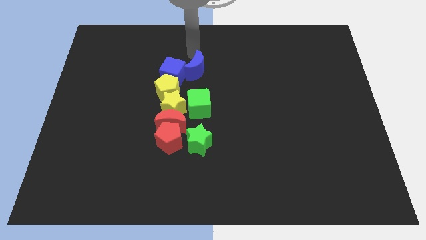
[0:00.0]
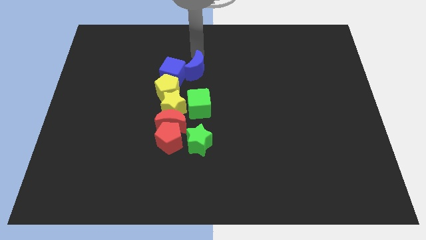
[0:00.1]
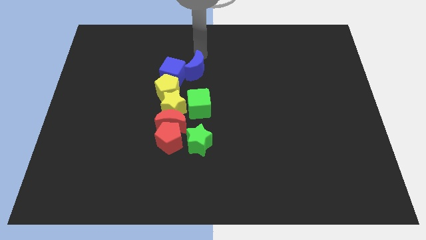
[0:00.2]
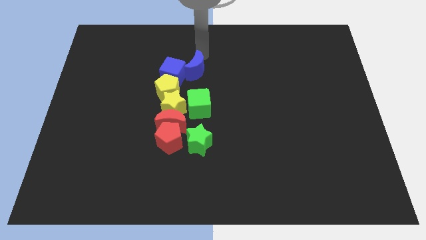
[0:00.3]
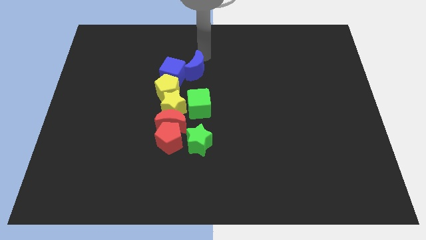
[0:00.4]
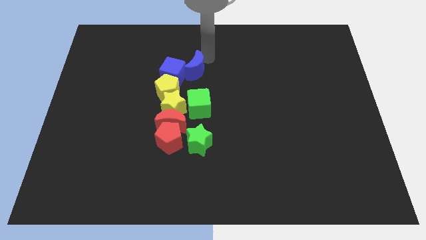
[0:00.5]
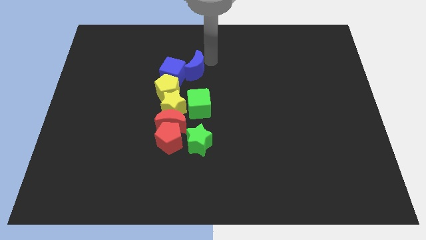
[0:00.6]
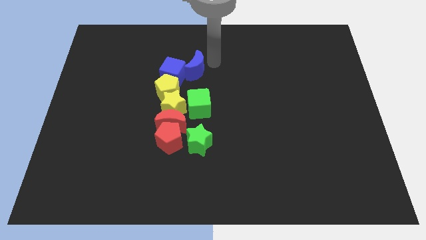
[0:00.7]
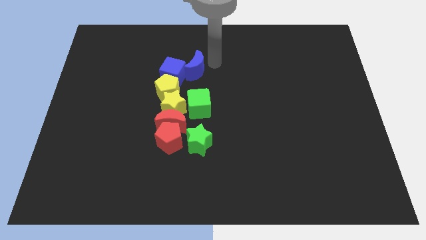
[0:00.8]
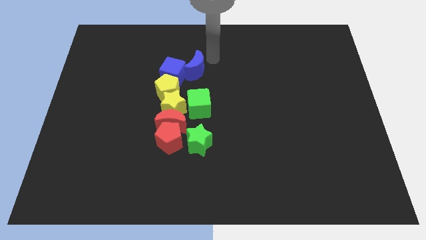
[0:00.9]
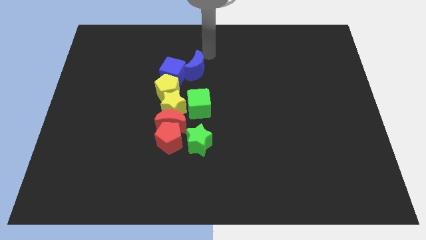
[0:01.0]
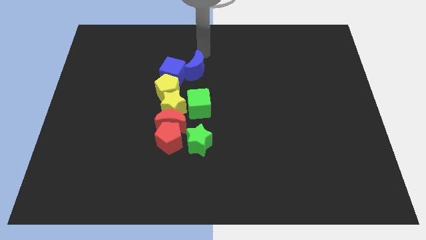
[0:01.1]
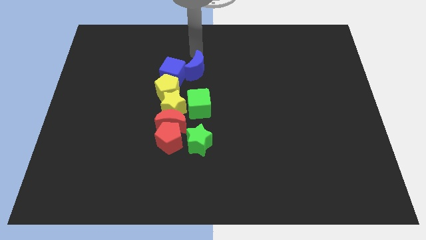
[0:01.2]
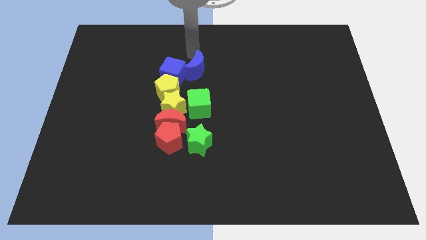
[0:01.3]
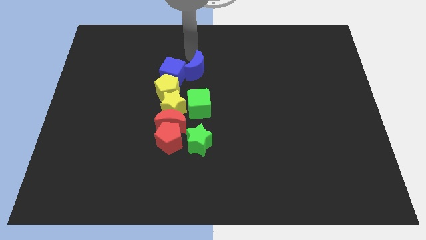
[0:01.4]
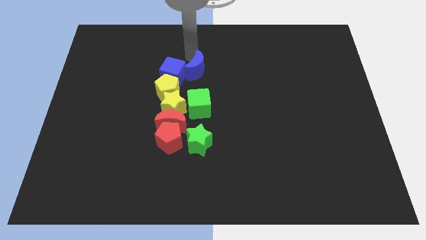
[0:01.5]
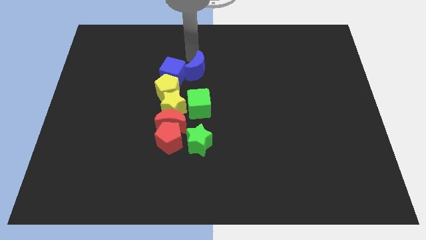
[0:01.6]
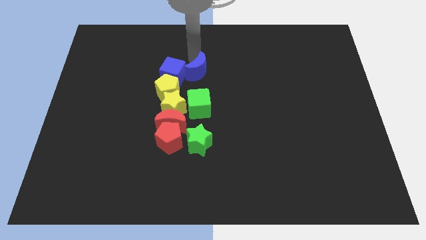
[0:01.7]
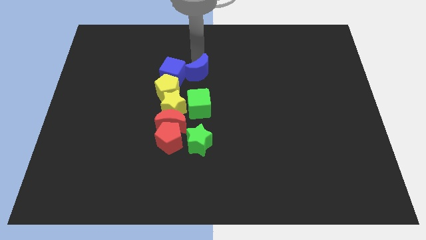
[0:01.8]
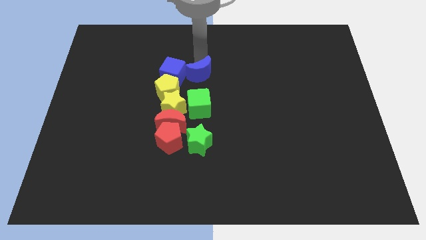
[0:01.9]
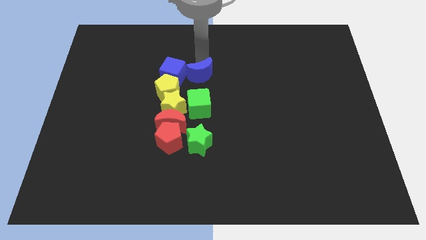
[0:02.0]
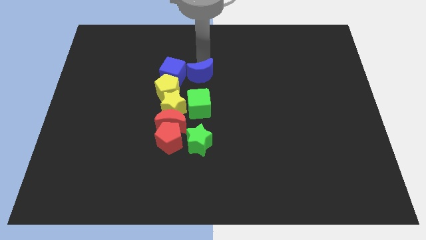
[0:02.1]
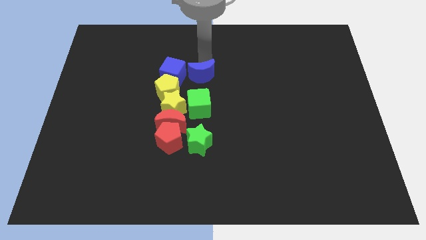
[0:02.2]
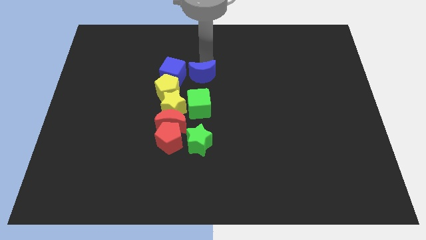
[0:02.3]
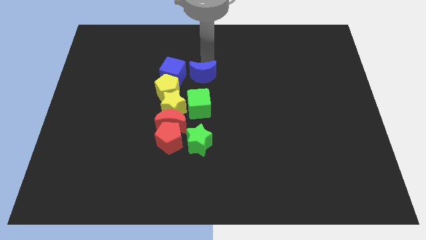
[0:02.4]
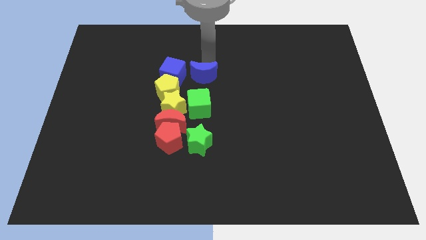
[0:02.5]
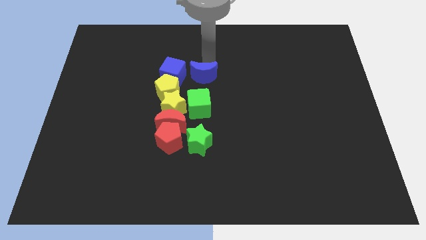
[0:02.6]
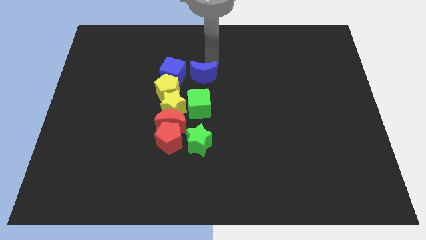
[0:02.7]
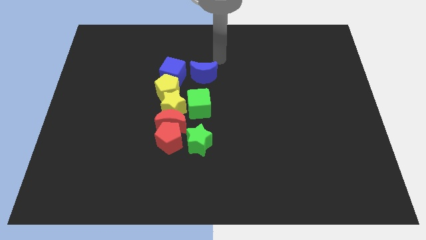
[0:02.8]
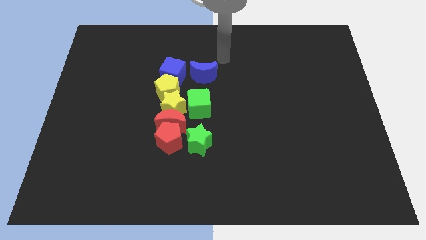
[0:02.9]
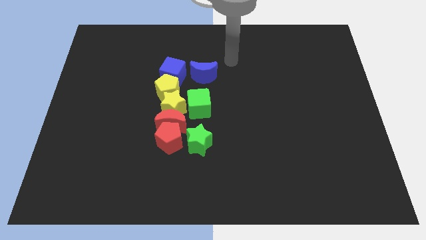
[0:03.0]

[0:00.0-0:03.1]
slide the blue crescent horizontally on the right side of the blue cube

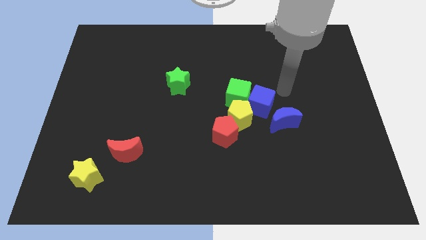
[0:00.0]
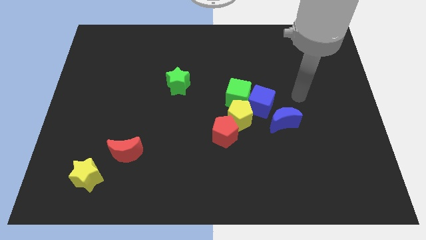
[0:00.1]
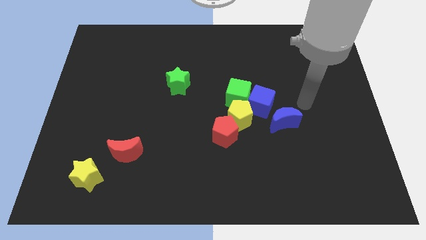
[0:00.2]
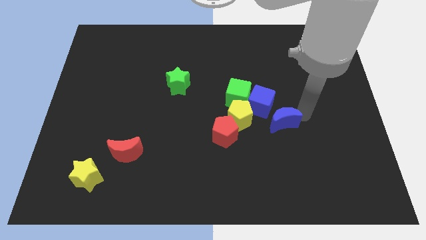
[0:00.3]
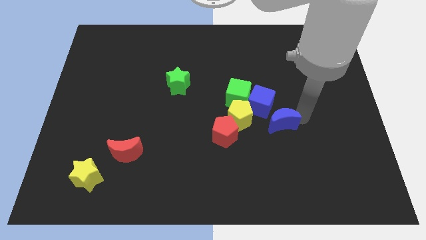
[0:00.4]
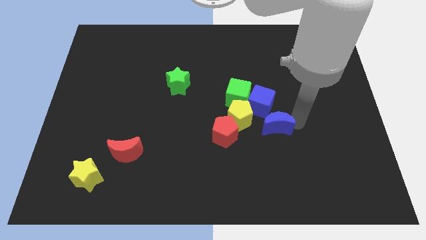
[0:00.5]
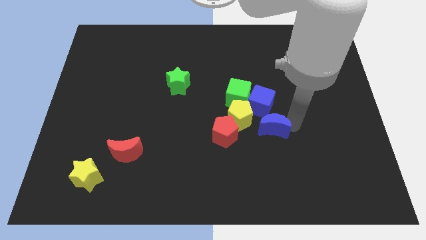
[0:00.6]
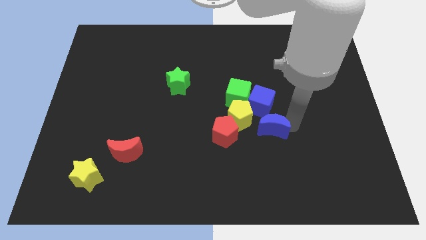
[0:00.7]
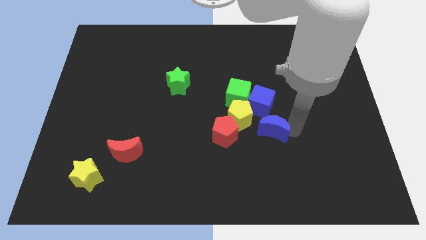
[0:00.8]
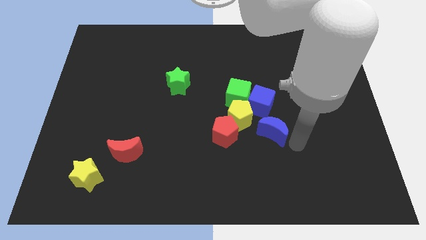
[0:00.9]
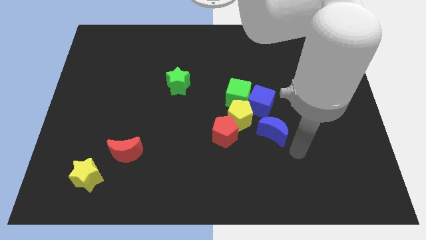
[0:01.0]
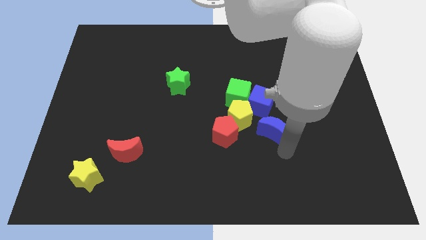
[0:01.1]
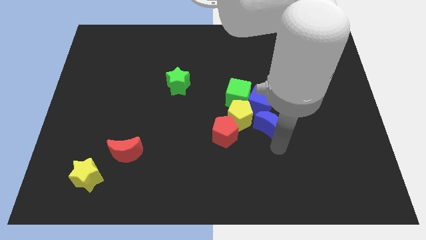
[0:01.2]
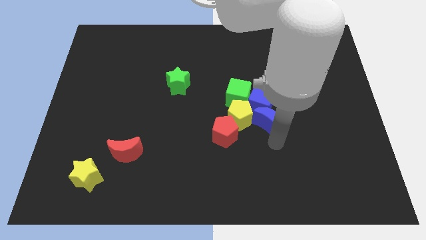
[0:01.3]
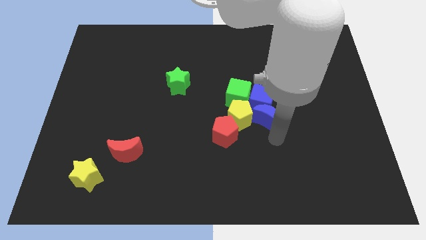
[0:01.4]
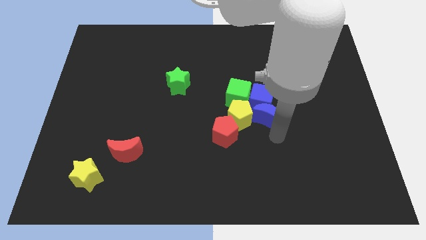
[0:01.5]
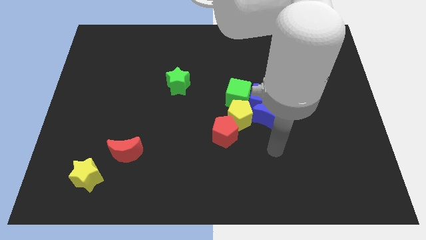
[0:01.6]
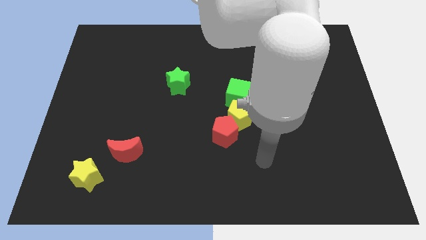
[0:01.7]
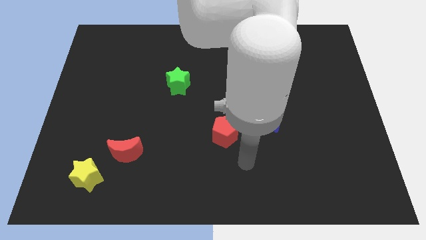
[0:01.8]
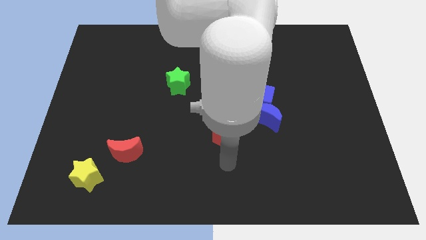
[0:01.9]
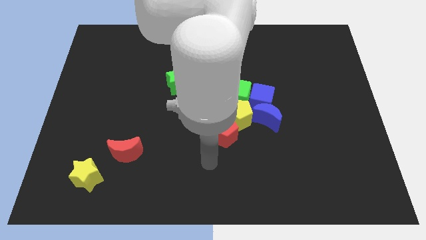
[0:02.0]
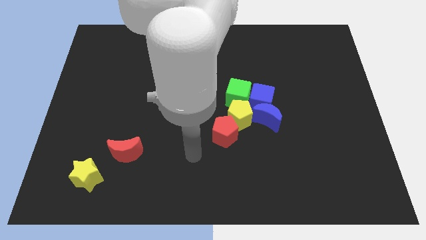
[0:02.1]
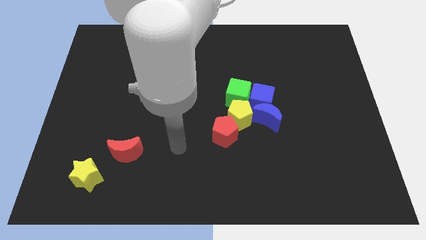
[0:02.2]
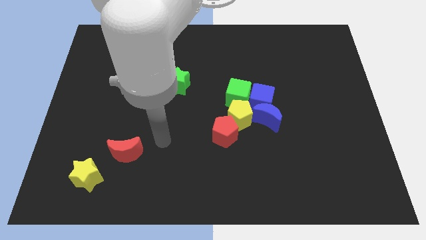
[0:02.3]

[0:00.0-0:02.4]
move the blue moon close to the blue cube

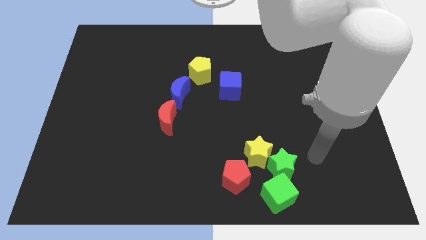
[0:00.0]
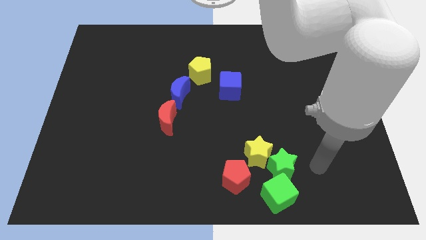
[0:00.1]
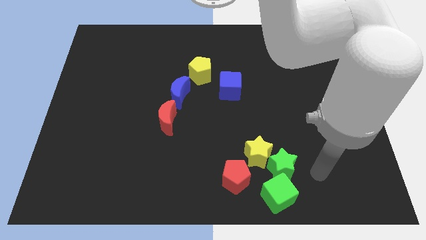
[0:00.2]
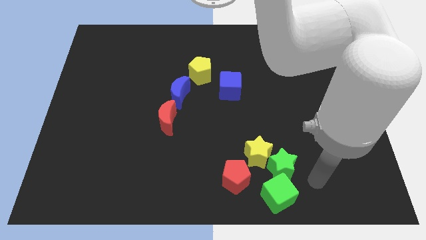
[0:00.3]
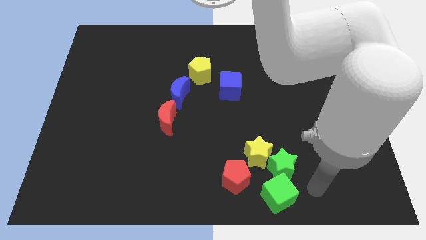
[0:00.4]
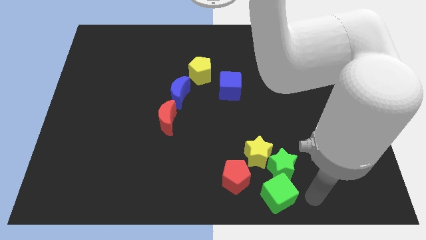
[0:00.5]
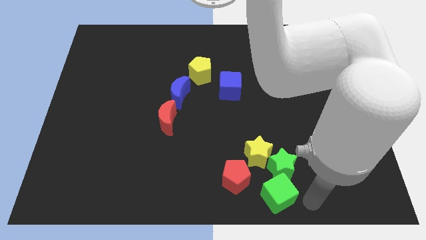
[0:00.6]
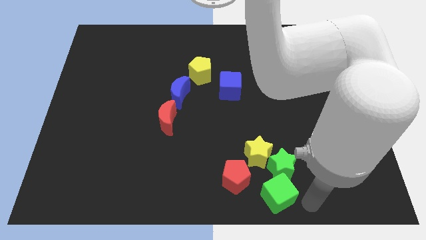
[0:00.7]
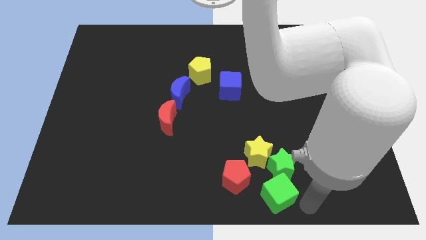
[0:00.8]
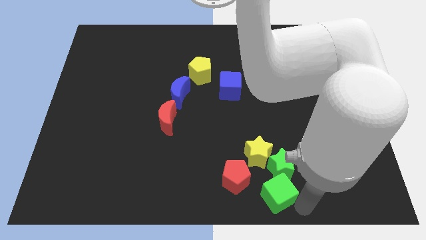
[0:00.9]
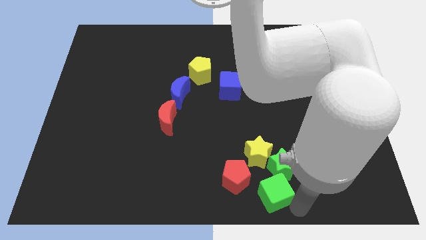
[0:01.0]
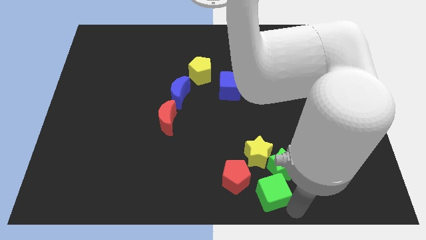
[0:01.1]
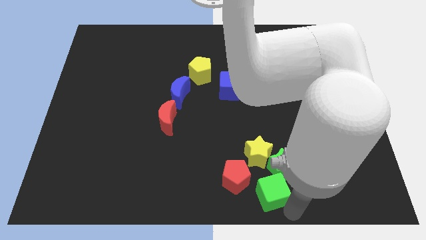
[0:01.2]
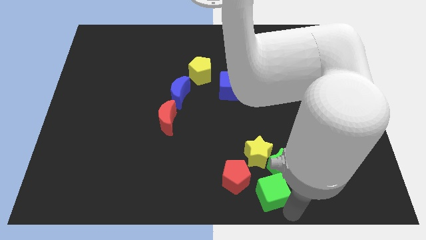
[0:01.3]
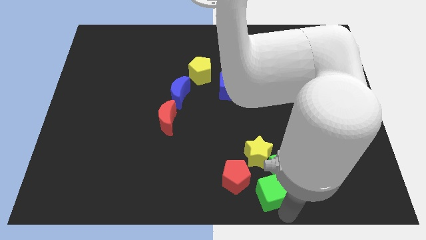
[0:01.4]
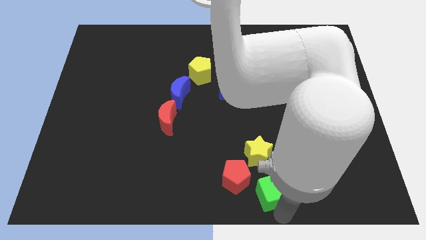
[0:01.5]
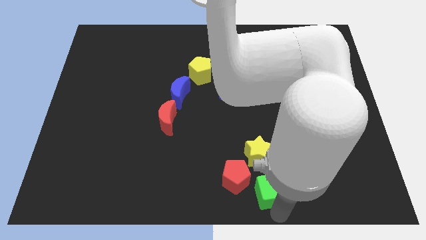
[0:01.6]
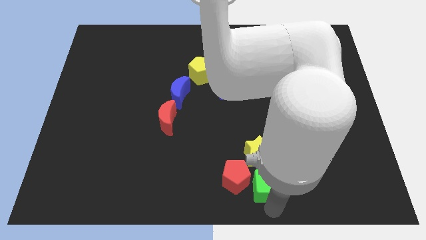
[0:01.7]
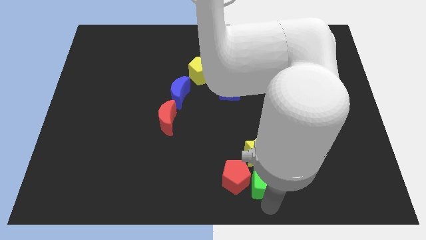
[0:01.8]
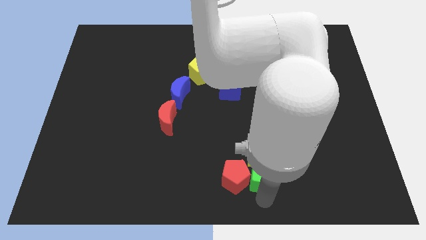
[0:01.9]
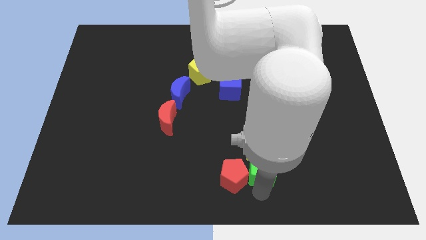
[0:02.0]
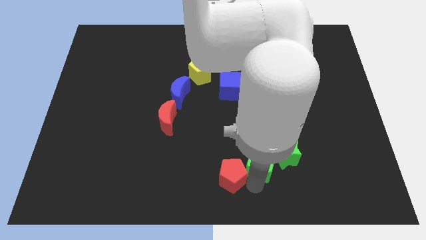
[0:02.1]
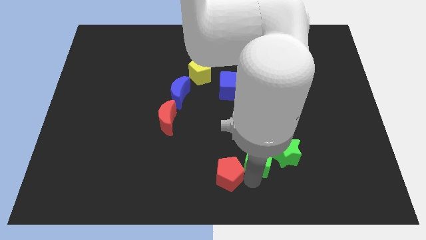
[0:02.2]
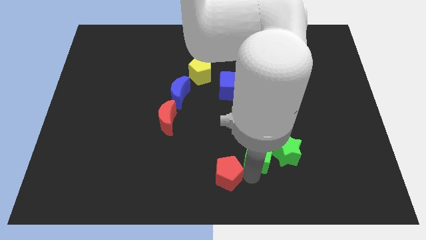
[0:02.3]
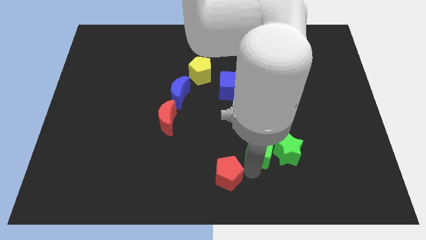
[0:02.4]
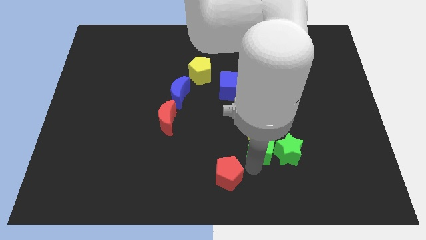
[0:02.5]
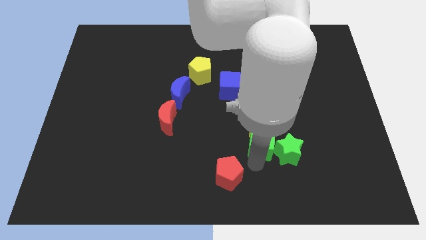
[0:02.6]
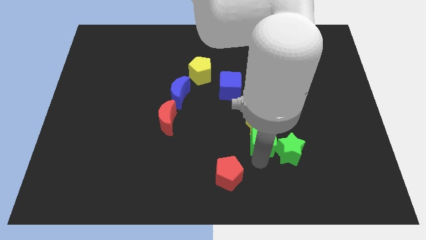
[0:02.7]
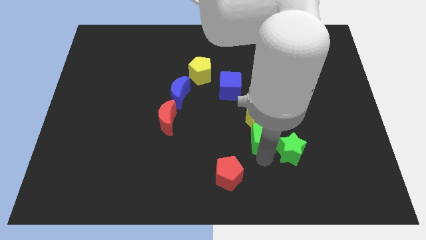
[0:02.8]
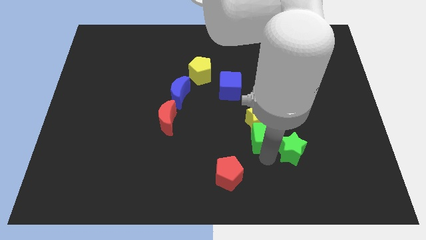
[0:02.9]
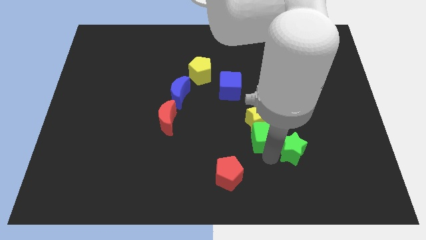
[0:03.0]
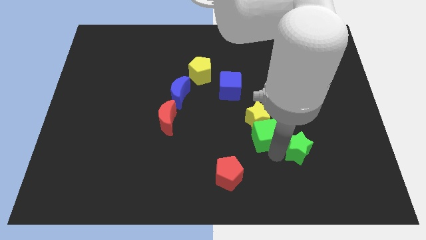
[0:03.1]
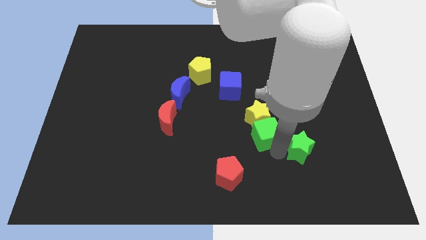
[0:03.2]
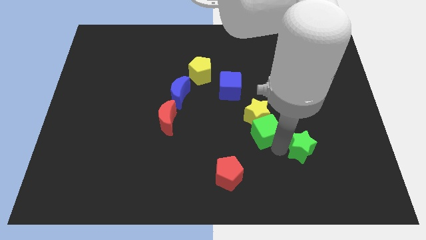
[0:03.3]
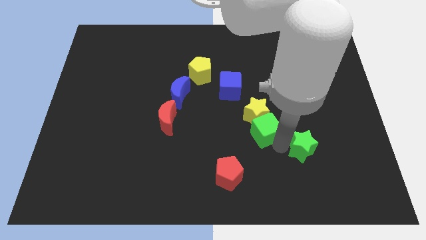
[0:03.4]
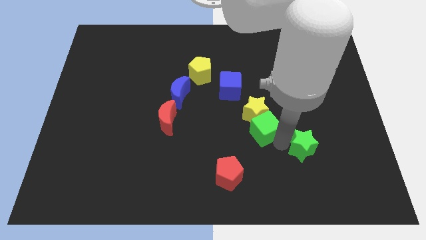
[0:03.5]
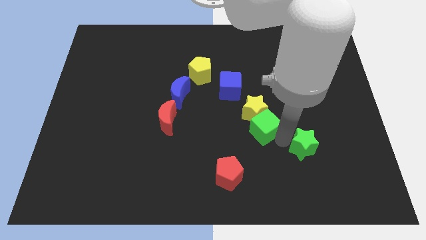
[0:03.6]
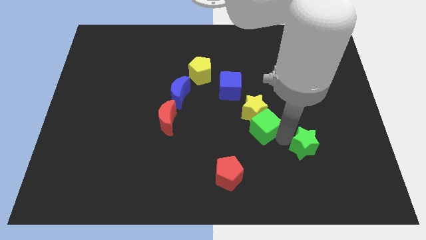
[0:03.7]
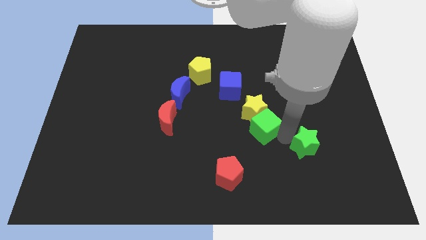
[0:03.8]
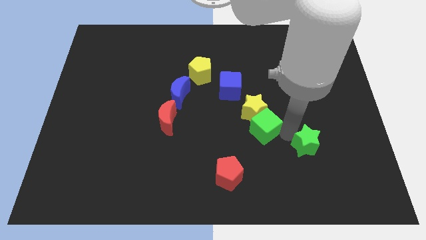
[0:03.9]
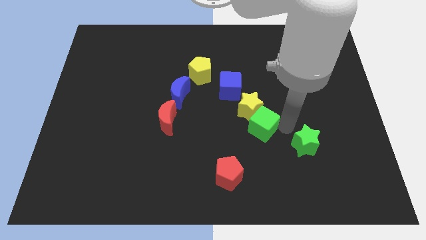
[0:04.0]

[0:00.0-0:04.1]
move the green cube to the right of the yellow star
